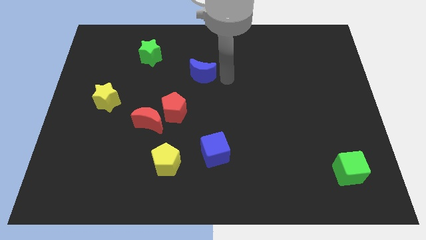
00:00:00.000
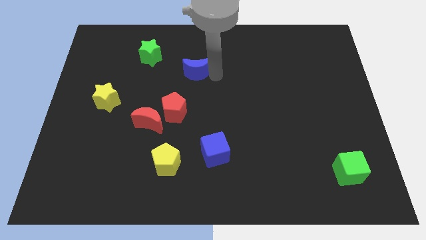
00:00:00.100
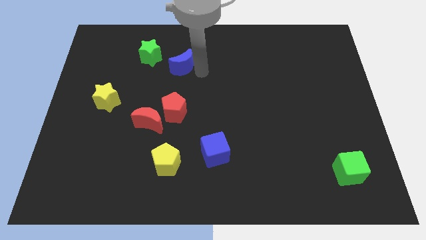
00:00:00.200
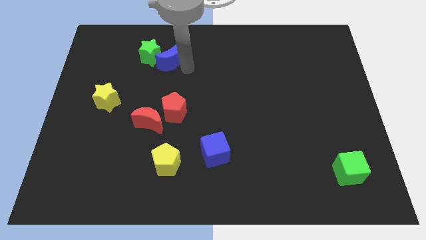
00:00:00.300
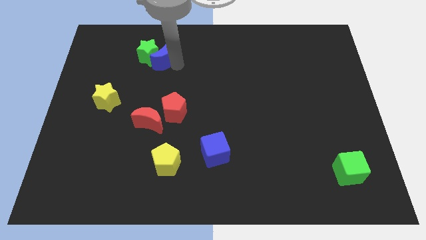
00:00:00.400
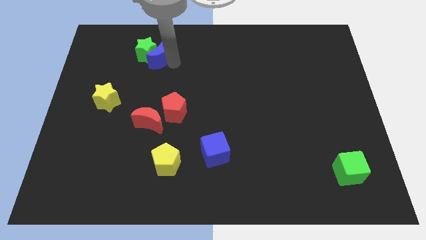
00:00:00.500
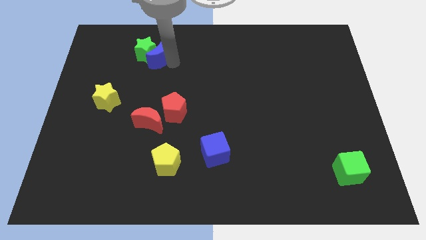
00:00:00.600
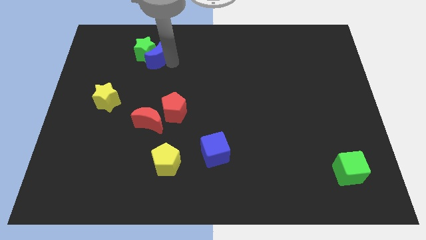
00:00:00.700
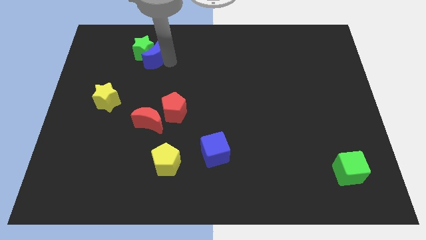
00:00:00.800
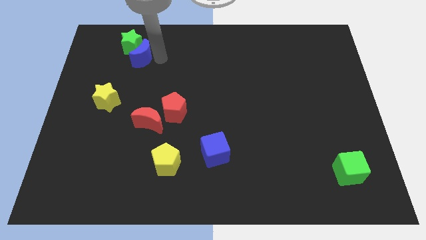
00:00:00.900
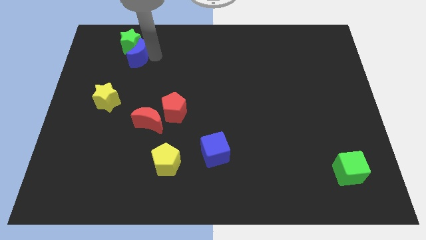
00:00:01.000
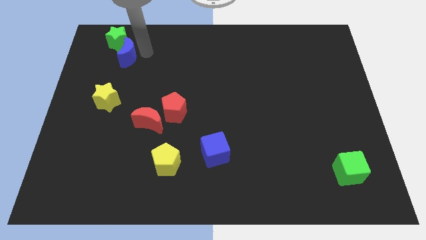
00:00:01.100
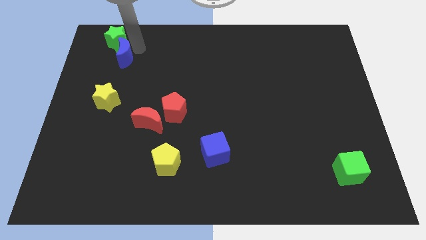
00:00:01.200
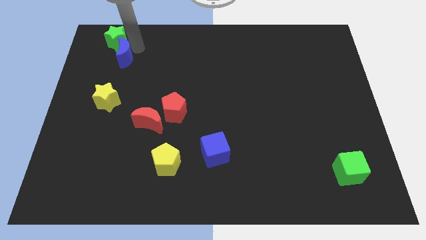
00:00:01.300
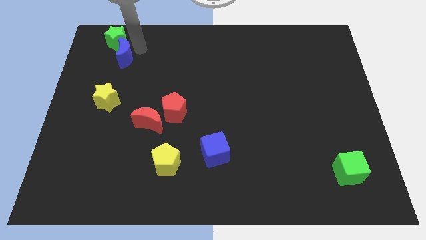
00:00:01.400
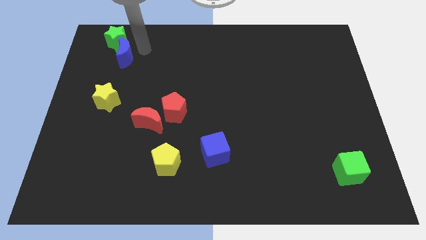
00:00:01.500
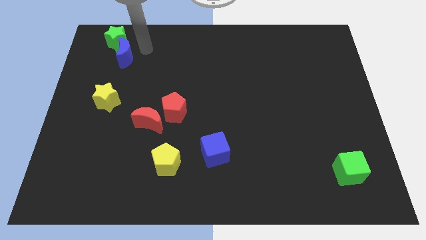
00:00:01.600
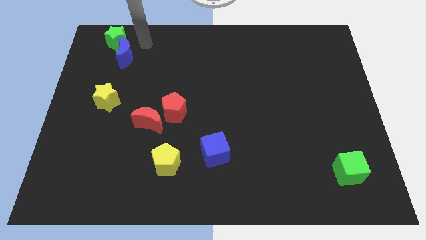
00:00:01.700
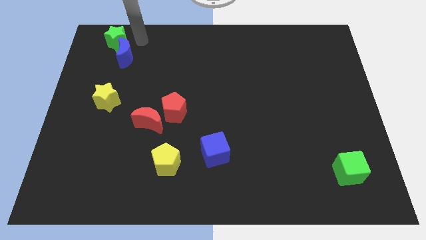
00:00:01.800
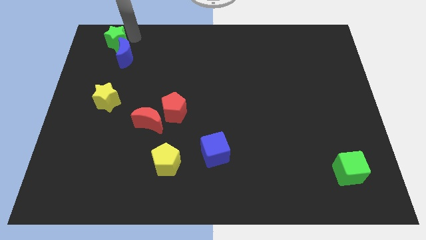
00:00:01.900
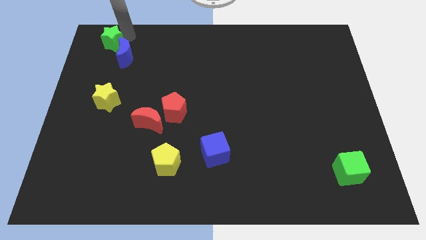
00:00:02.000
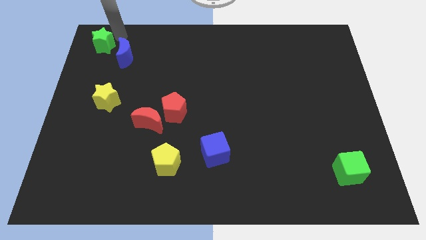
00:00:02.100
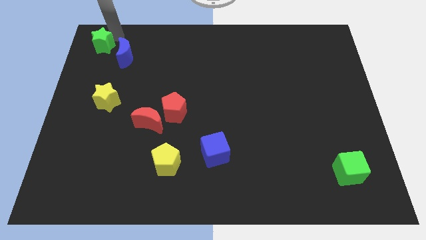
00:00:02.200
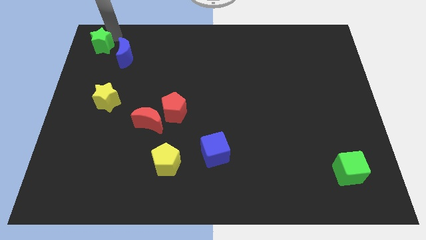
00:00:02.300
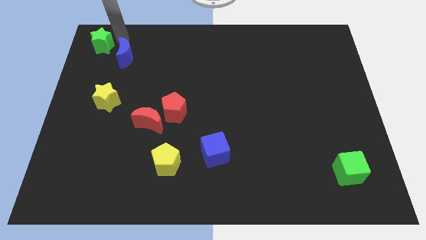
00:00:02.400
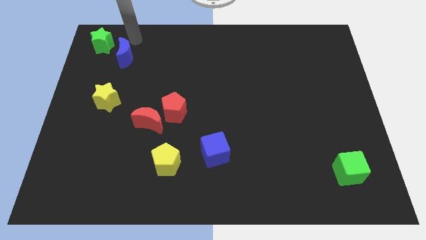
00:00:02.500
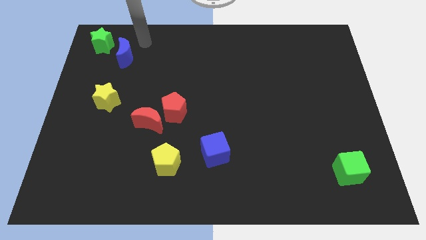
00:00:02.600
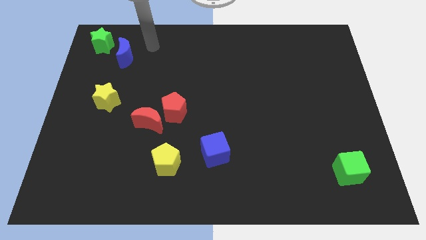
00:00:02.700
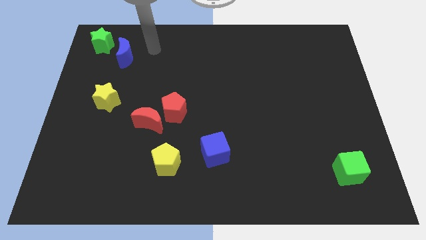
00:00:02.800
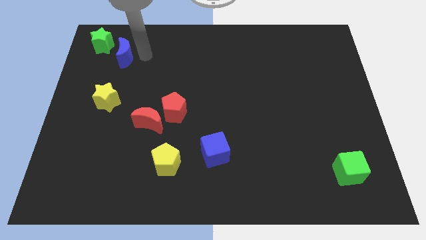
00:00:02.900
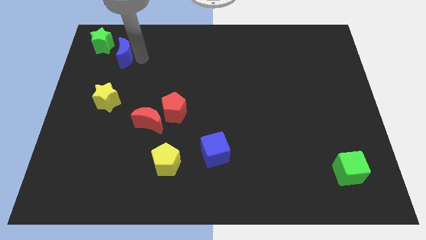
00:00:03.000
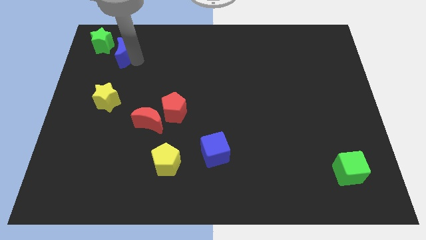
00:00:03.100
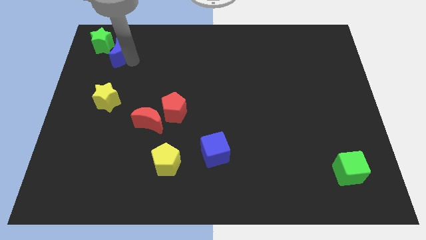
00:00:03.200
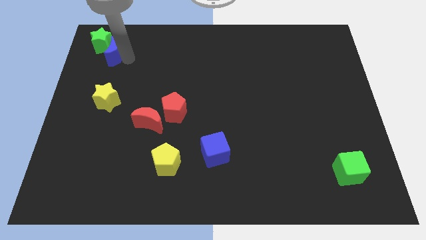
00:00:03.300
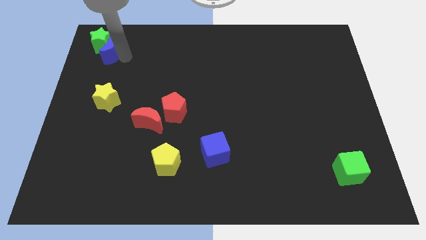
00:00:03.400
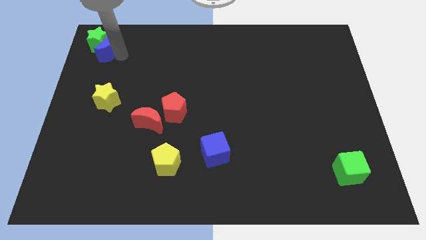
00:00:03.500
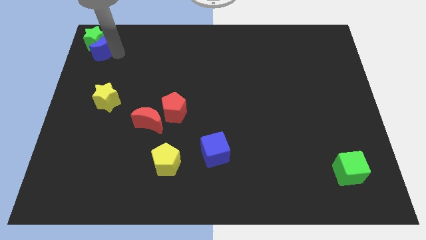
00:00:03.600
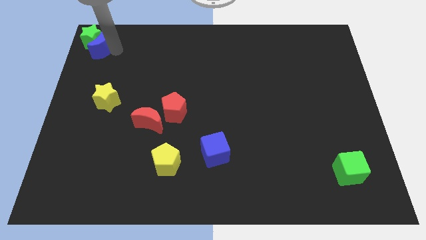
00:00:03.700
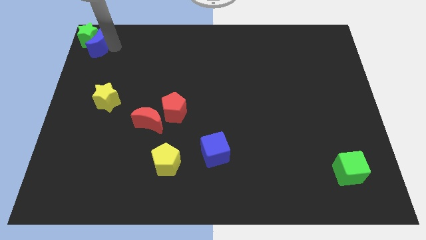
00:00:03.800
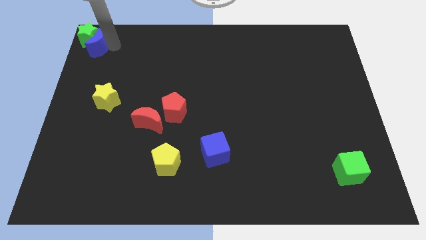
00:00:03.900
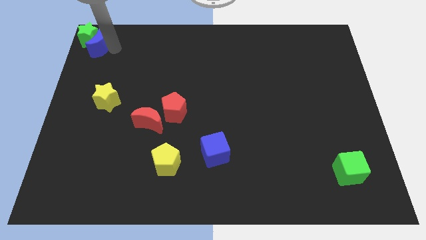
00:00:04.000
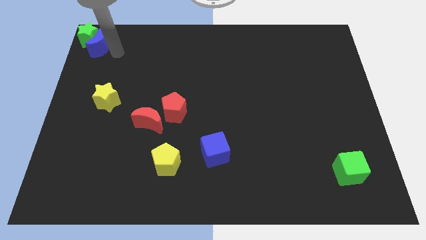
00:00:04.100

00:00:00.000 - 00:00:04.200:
push the green star and blue crescent to the top left of the board

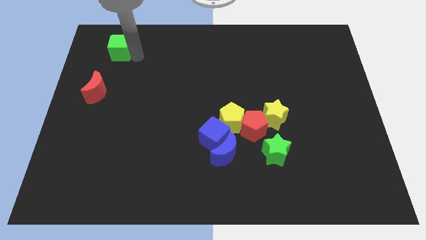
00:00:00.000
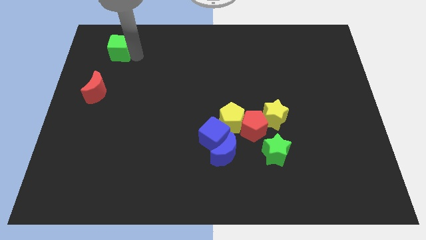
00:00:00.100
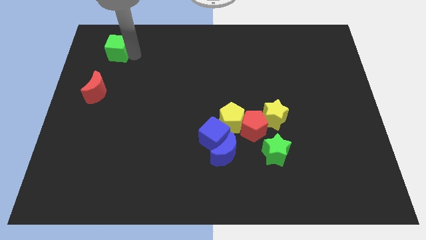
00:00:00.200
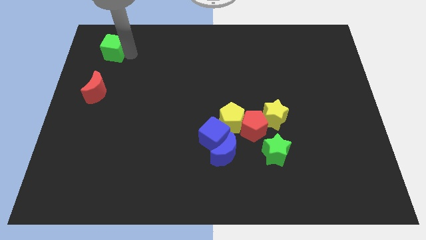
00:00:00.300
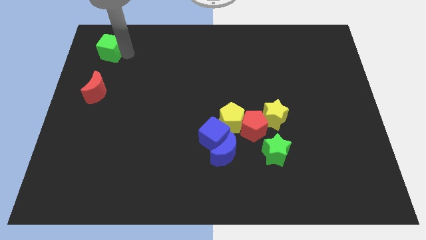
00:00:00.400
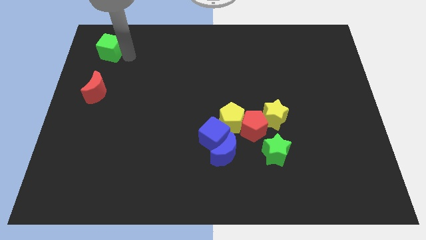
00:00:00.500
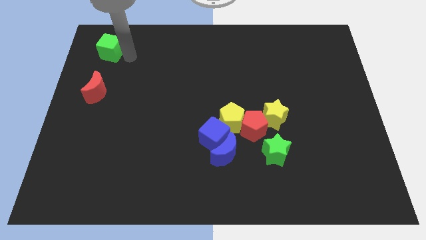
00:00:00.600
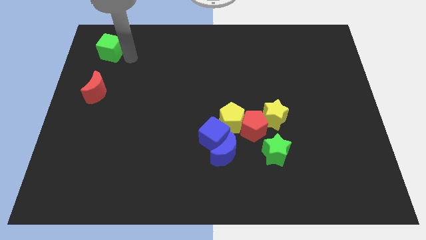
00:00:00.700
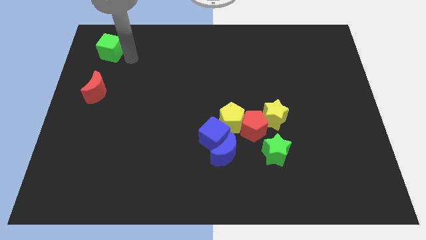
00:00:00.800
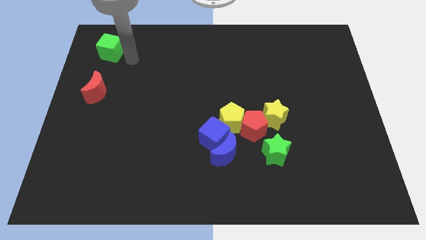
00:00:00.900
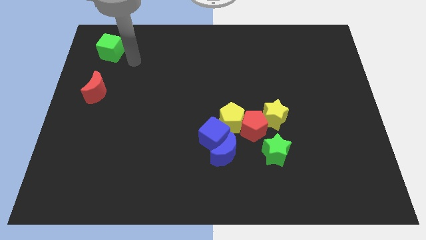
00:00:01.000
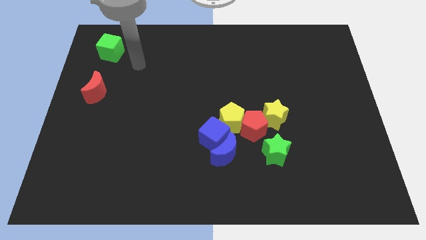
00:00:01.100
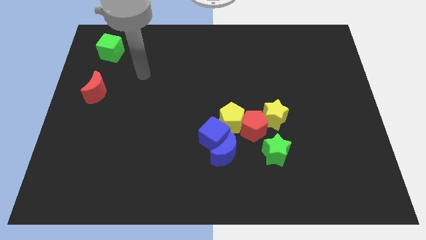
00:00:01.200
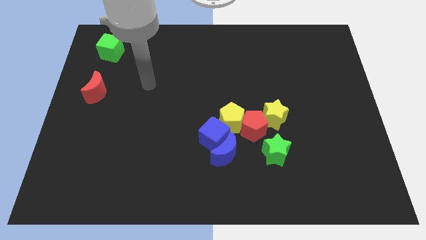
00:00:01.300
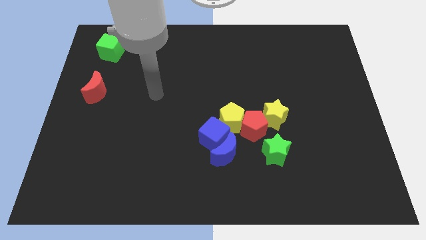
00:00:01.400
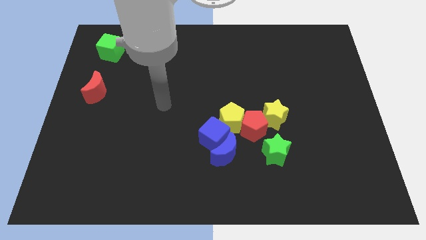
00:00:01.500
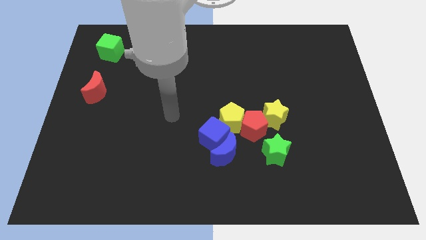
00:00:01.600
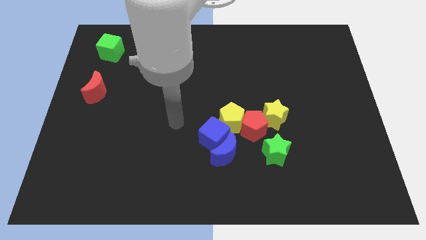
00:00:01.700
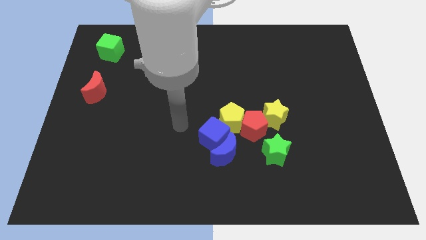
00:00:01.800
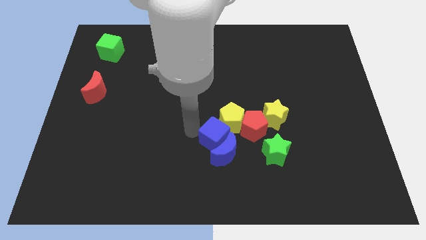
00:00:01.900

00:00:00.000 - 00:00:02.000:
move your arm to the right of blue cube

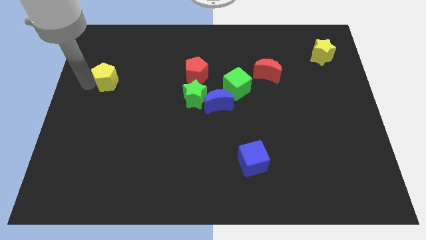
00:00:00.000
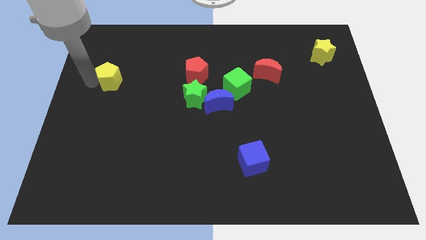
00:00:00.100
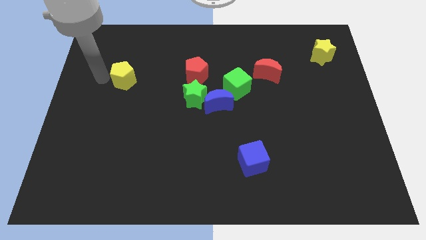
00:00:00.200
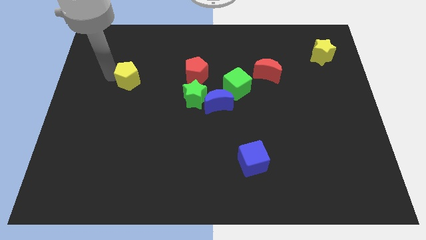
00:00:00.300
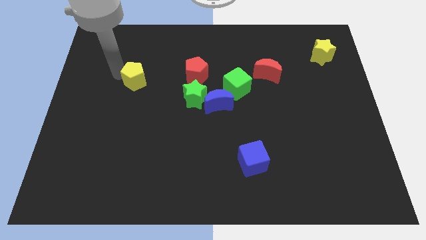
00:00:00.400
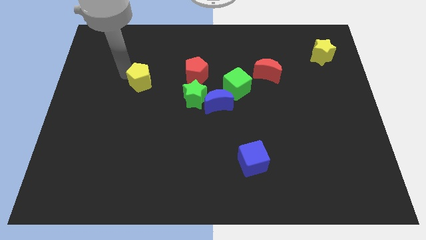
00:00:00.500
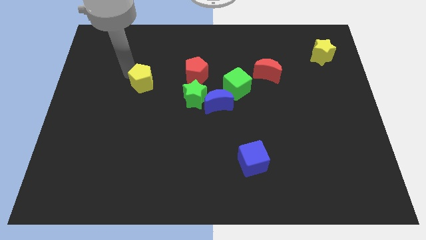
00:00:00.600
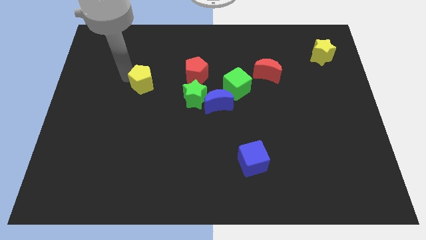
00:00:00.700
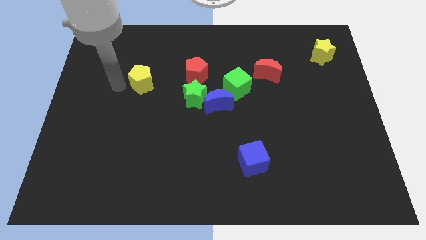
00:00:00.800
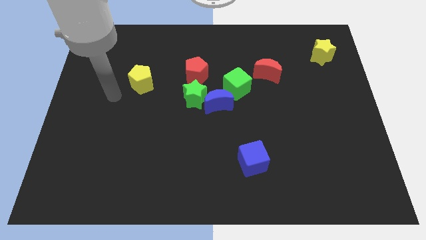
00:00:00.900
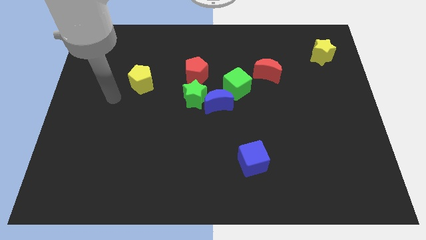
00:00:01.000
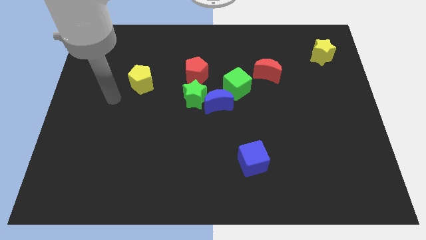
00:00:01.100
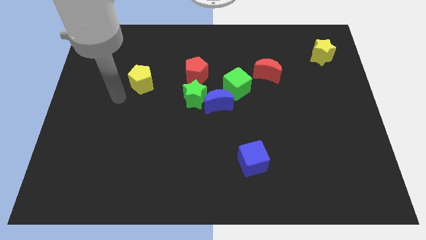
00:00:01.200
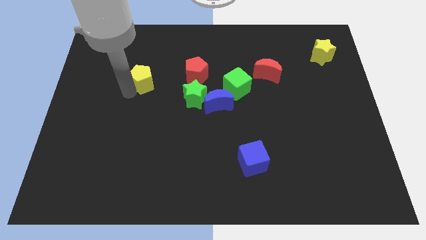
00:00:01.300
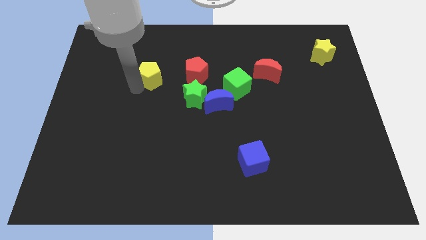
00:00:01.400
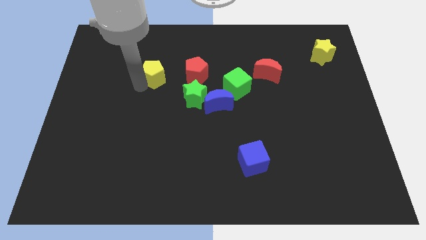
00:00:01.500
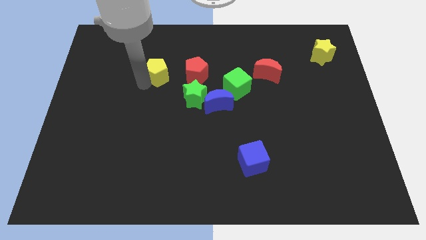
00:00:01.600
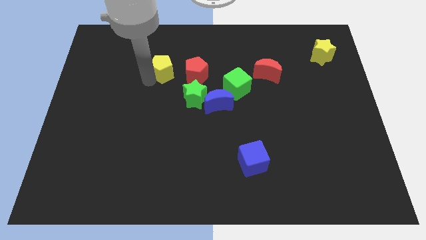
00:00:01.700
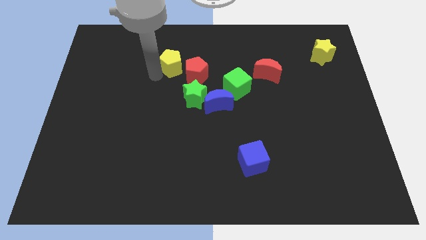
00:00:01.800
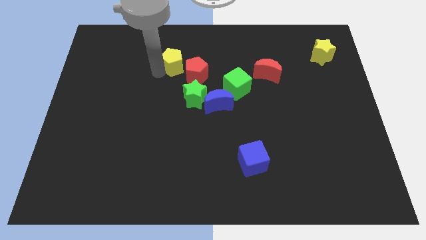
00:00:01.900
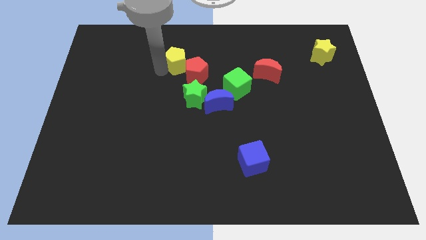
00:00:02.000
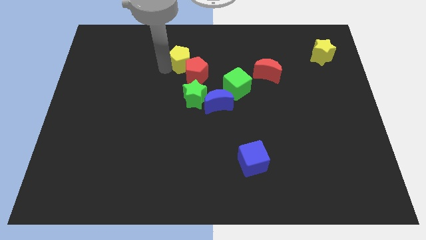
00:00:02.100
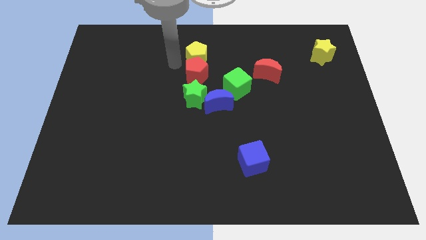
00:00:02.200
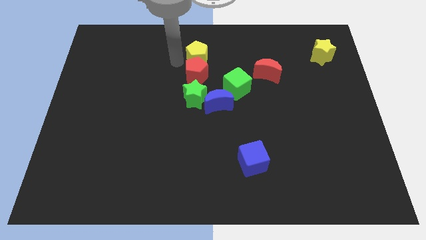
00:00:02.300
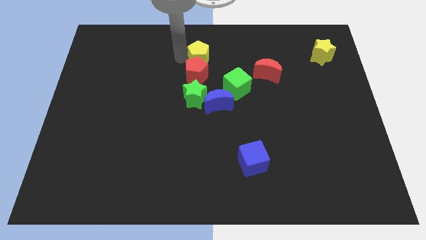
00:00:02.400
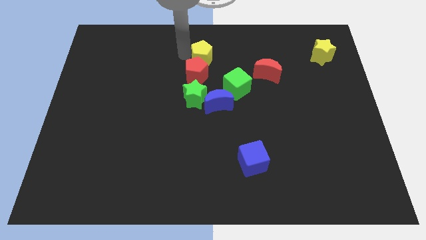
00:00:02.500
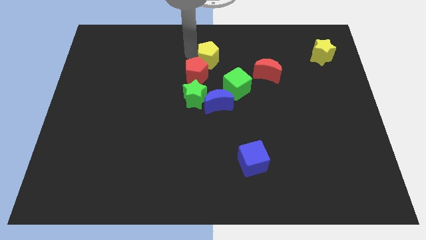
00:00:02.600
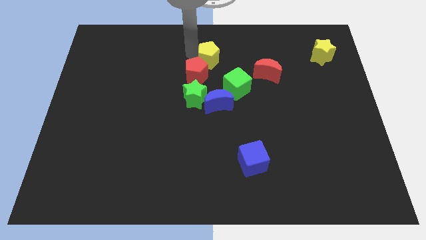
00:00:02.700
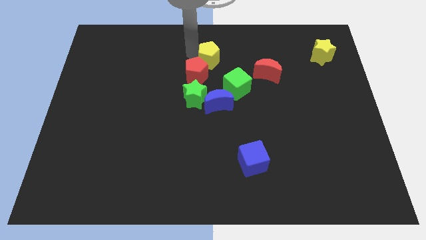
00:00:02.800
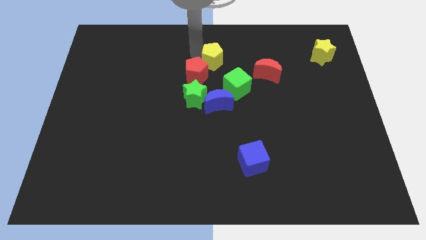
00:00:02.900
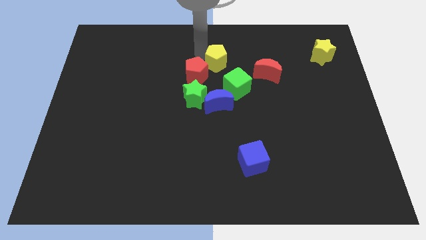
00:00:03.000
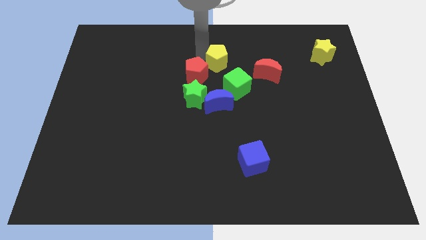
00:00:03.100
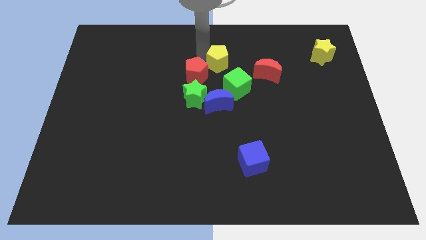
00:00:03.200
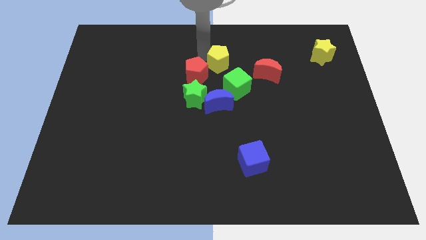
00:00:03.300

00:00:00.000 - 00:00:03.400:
push the yellow pentagon above the right side of red pentagon
